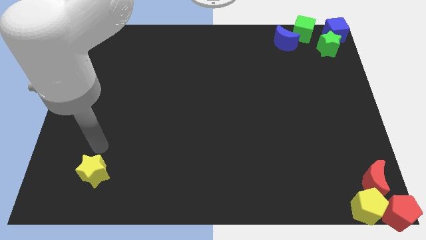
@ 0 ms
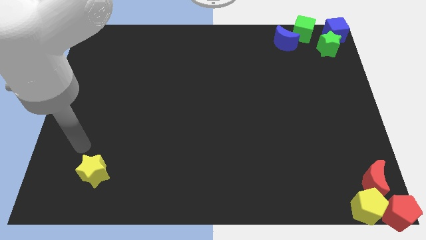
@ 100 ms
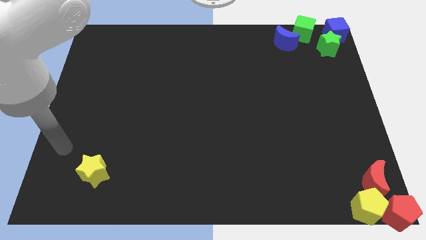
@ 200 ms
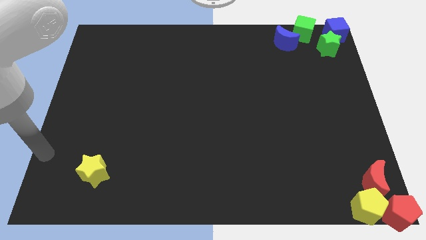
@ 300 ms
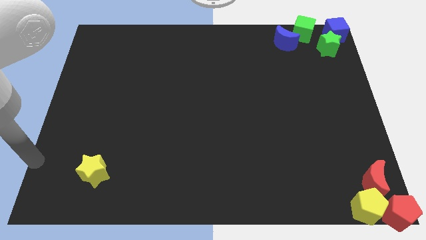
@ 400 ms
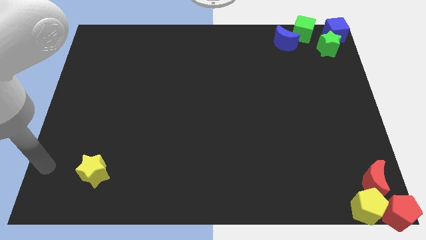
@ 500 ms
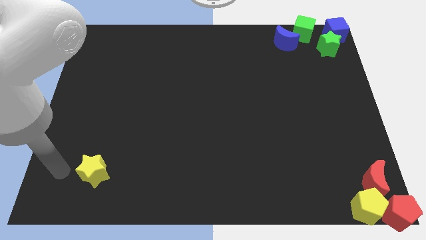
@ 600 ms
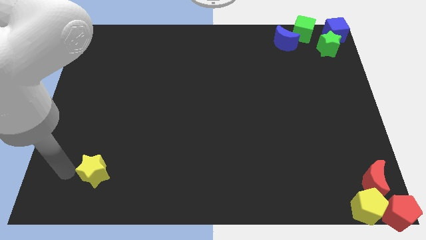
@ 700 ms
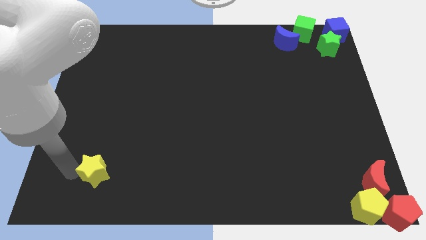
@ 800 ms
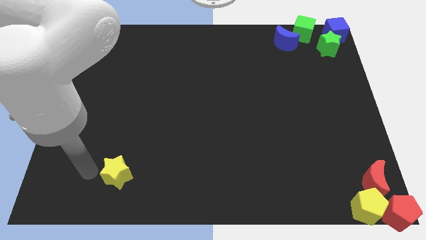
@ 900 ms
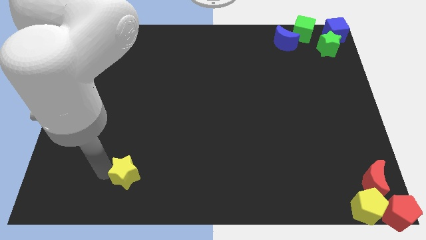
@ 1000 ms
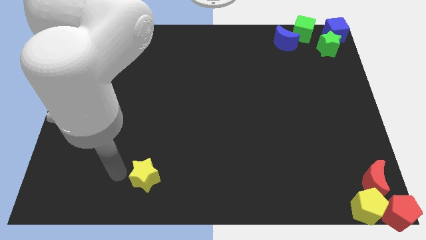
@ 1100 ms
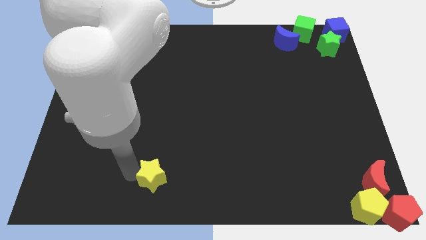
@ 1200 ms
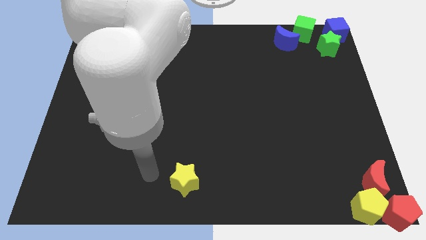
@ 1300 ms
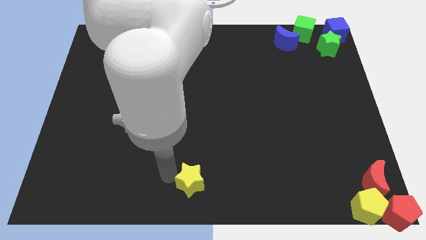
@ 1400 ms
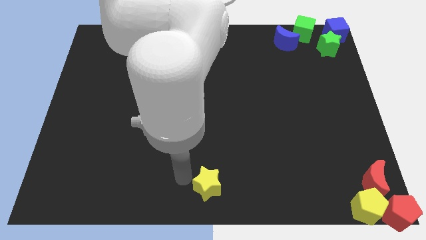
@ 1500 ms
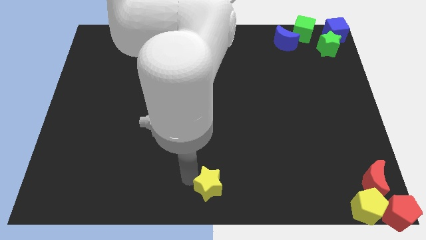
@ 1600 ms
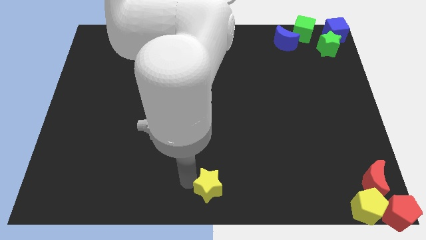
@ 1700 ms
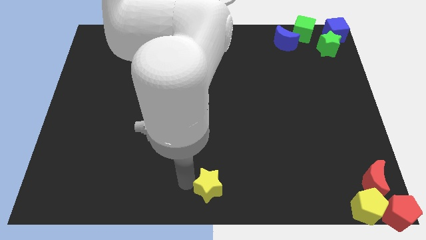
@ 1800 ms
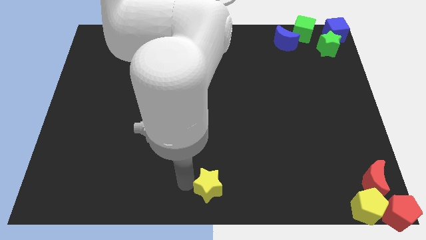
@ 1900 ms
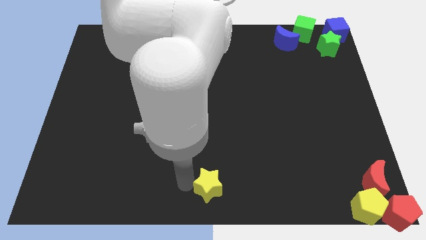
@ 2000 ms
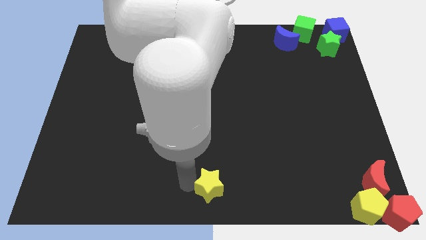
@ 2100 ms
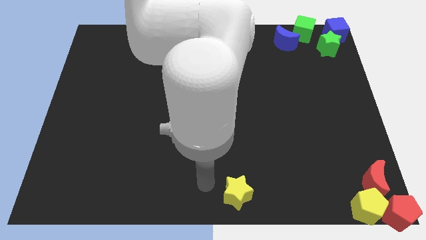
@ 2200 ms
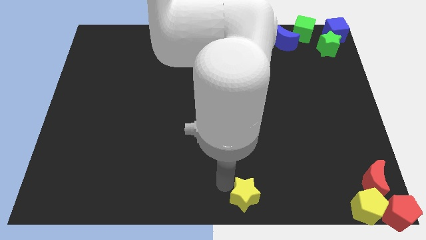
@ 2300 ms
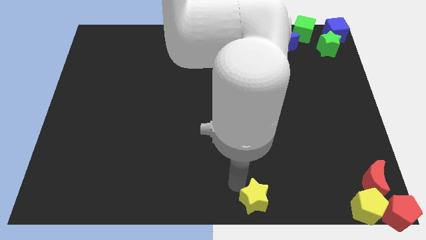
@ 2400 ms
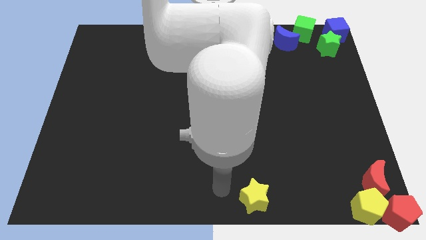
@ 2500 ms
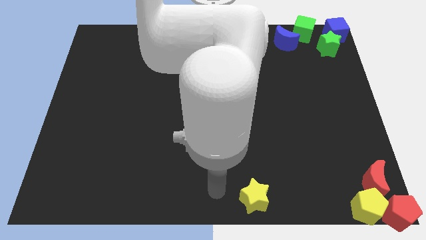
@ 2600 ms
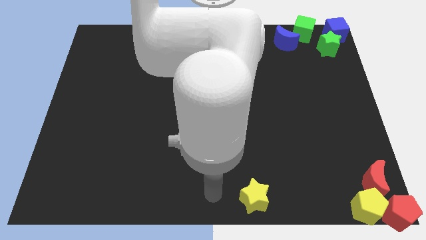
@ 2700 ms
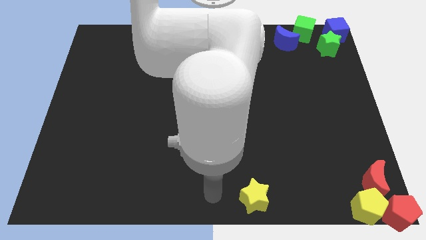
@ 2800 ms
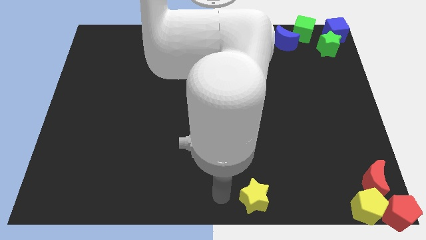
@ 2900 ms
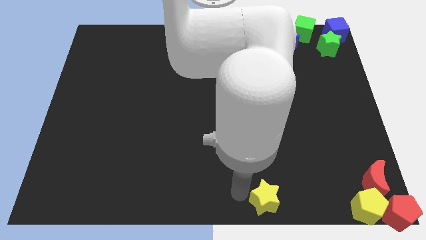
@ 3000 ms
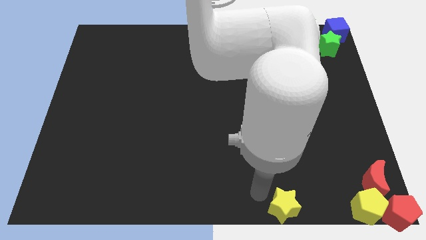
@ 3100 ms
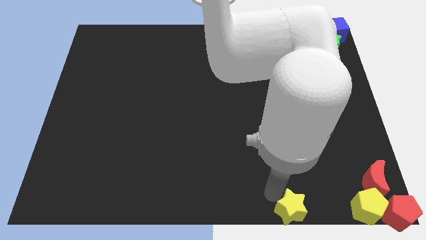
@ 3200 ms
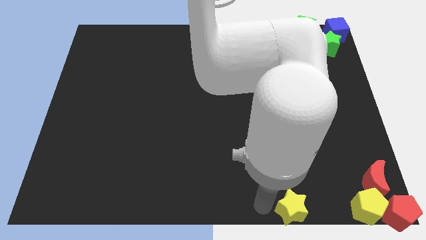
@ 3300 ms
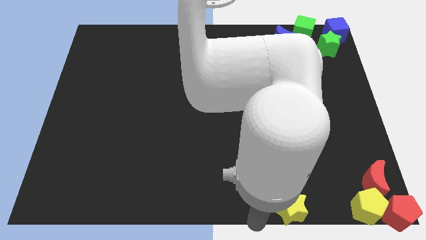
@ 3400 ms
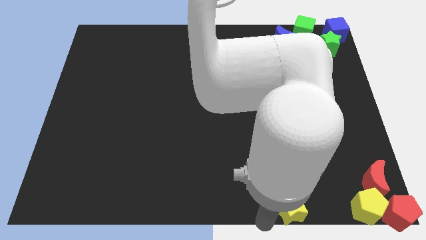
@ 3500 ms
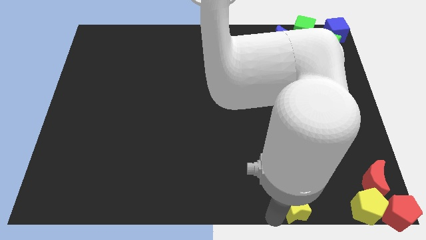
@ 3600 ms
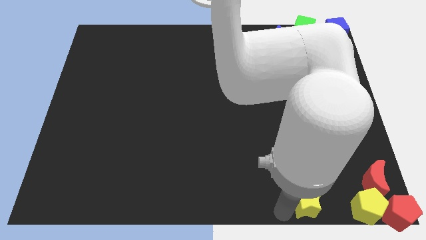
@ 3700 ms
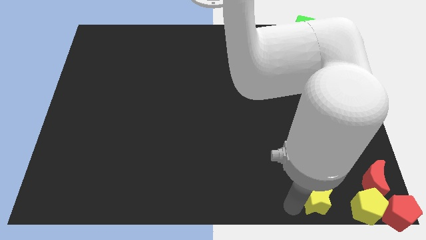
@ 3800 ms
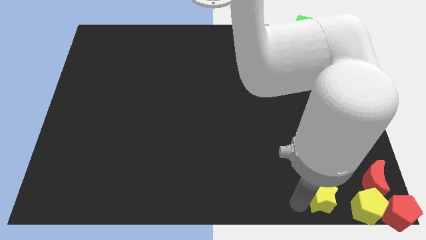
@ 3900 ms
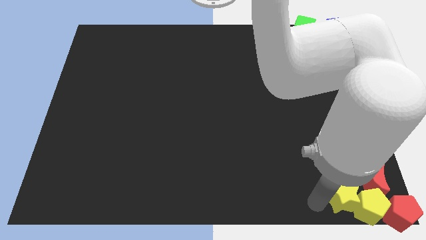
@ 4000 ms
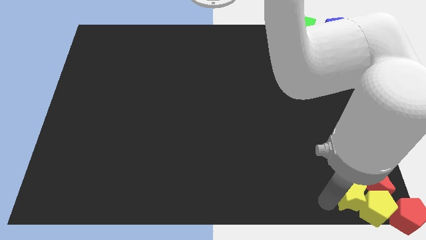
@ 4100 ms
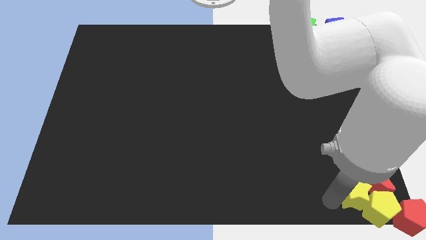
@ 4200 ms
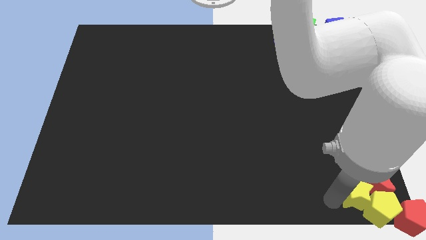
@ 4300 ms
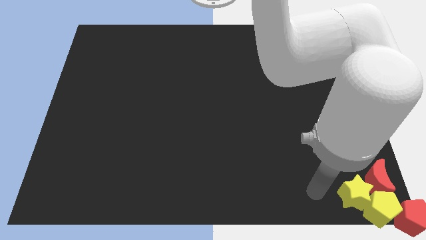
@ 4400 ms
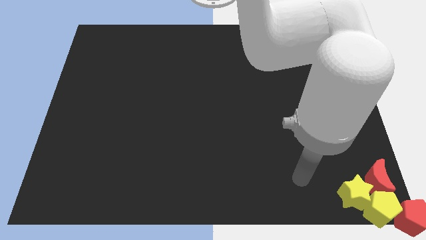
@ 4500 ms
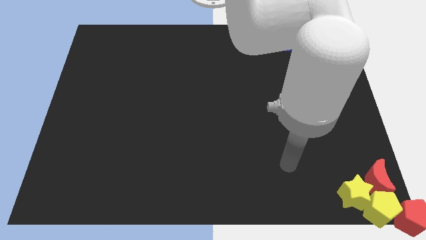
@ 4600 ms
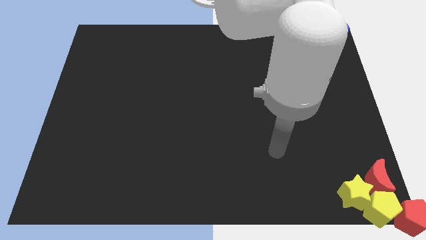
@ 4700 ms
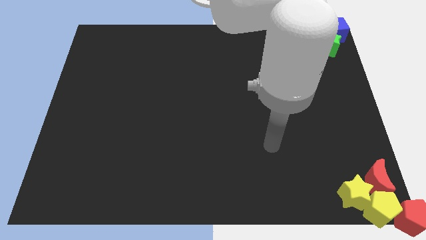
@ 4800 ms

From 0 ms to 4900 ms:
push the yellow star into the group of blocks

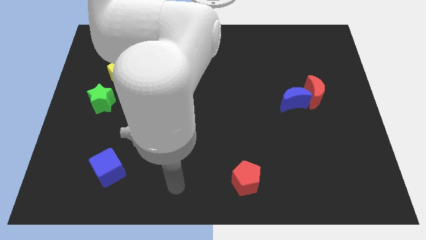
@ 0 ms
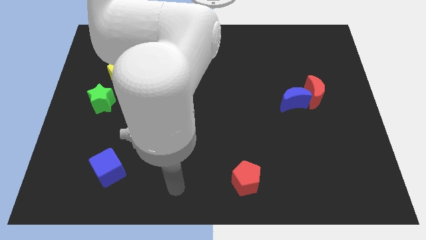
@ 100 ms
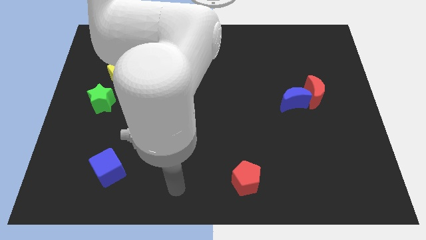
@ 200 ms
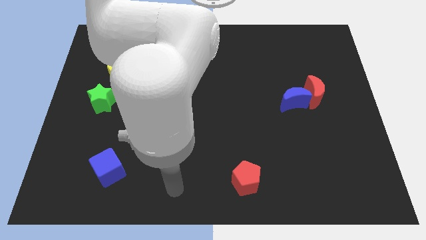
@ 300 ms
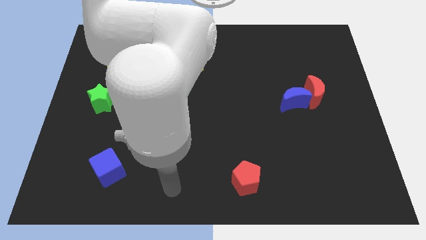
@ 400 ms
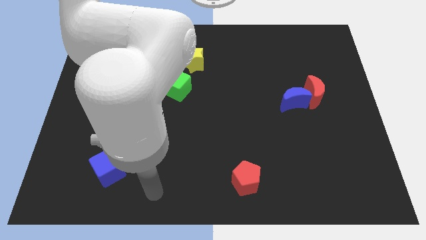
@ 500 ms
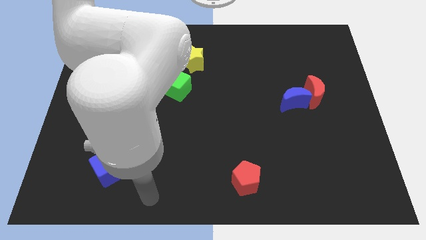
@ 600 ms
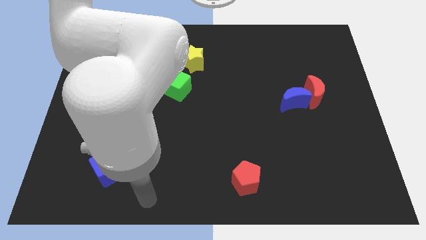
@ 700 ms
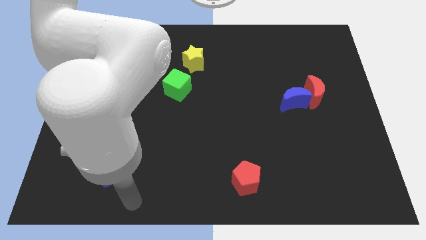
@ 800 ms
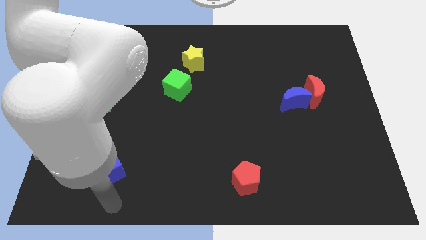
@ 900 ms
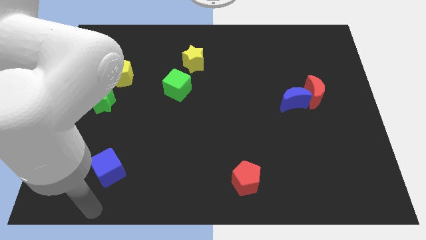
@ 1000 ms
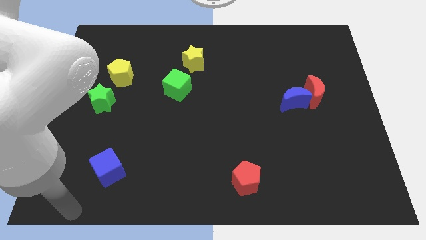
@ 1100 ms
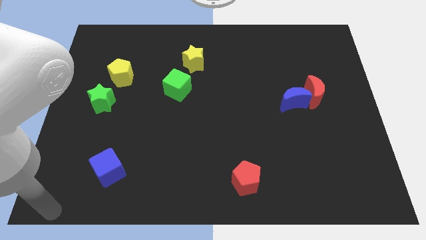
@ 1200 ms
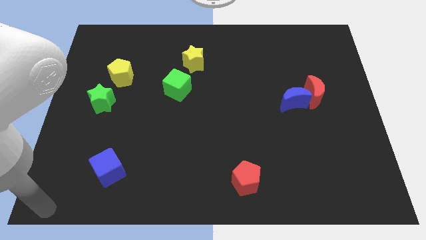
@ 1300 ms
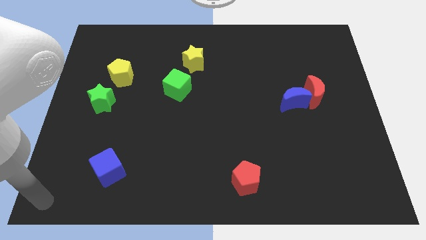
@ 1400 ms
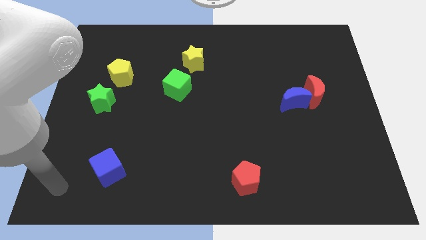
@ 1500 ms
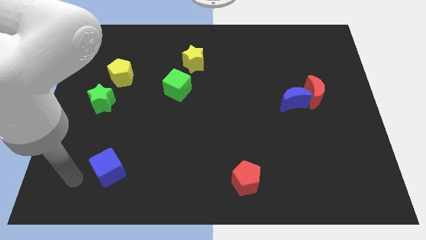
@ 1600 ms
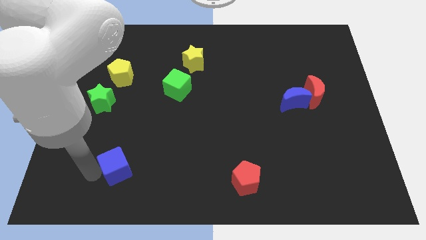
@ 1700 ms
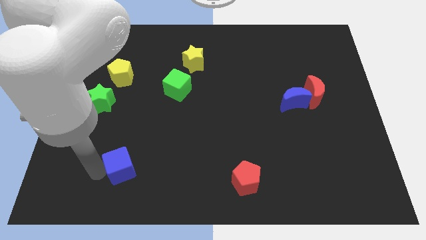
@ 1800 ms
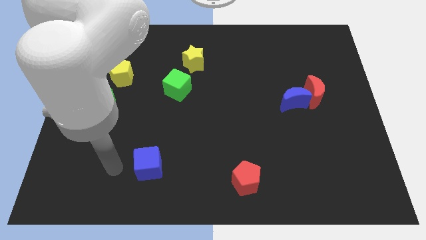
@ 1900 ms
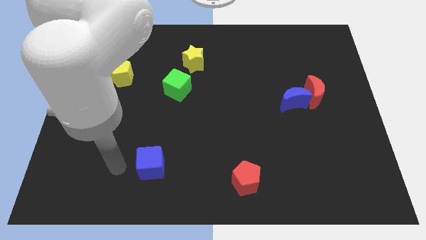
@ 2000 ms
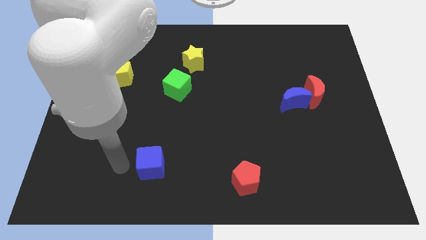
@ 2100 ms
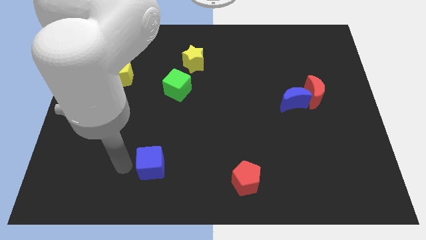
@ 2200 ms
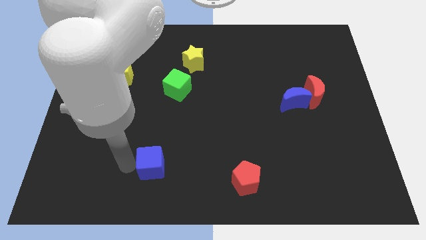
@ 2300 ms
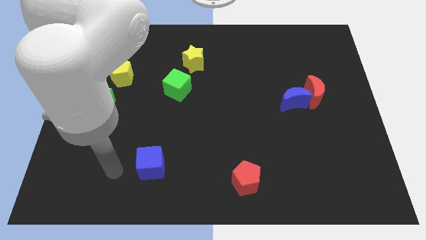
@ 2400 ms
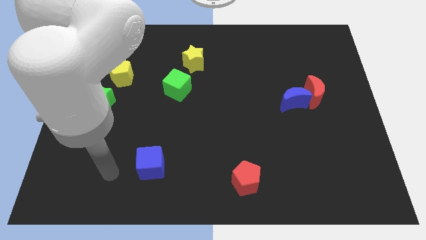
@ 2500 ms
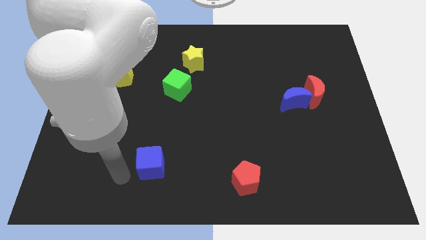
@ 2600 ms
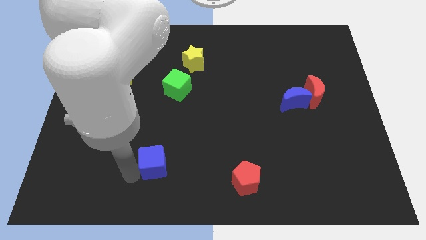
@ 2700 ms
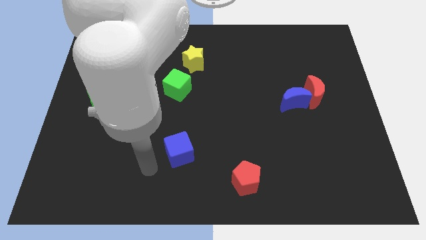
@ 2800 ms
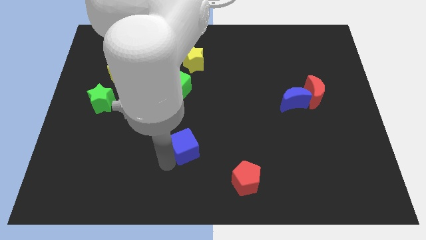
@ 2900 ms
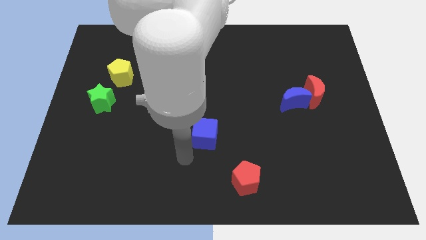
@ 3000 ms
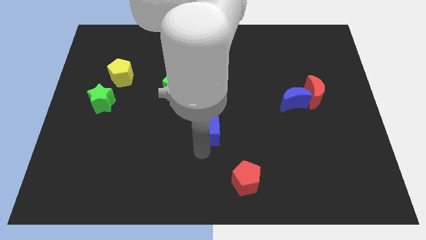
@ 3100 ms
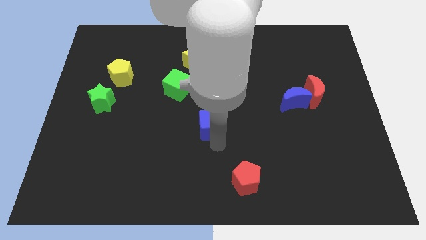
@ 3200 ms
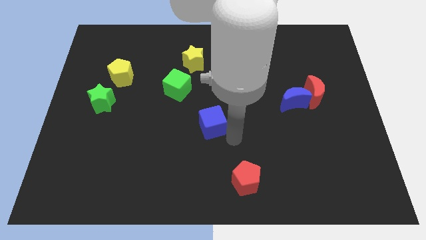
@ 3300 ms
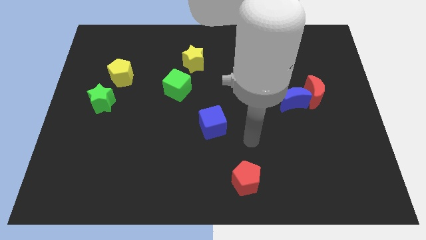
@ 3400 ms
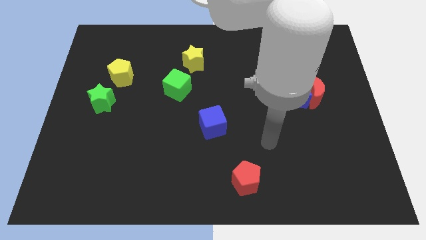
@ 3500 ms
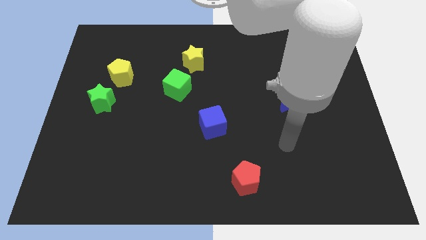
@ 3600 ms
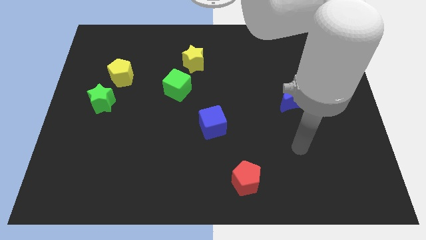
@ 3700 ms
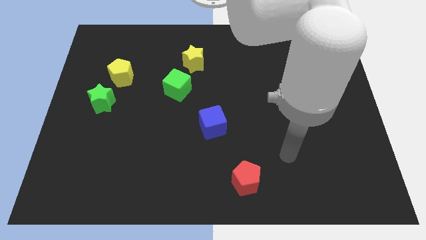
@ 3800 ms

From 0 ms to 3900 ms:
place the blue cube to the center of the board

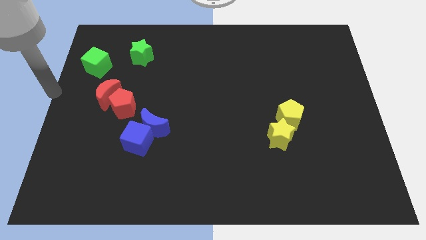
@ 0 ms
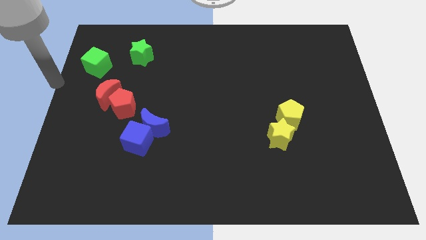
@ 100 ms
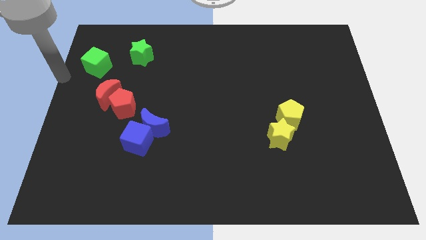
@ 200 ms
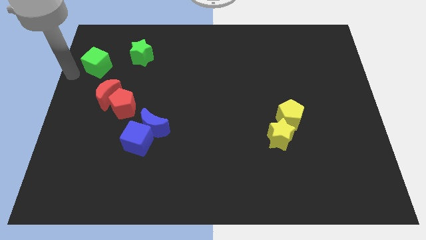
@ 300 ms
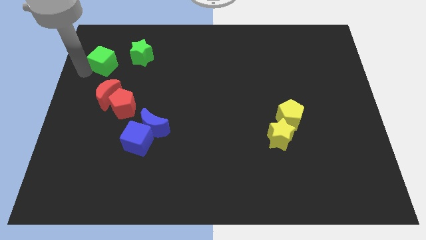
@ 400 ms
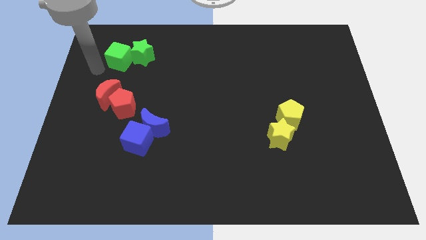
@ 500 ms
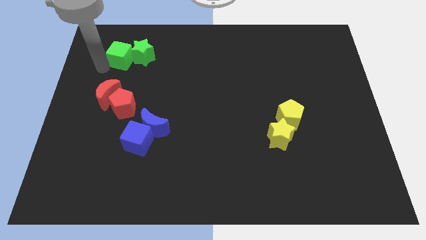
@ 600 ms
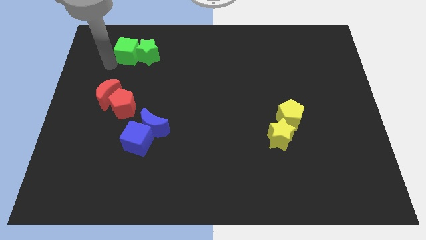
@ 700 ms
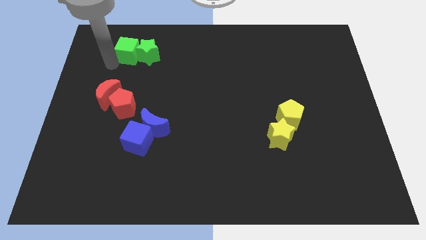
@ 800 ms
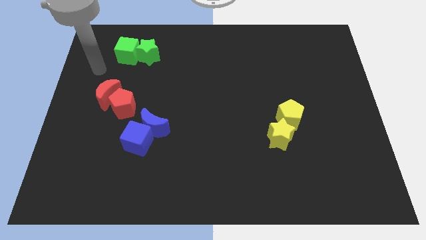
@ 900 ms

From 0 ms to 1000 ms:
push the green cube into the green star
